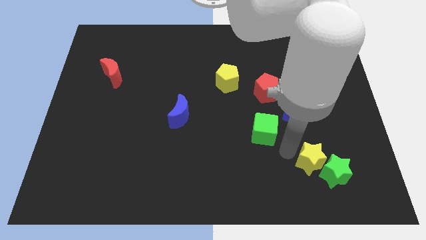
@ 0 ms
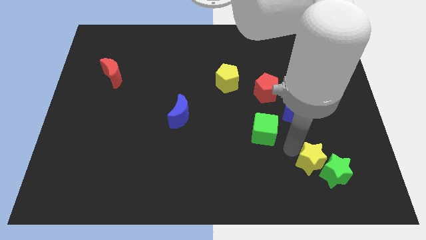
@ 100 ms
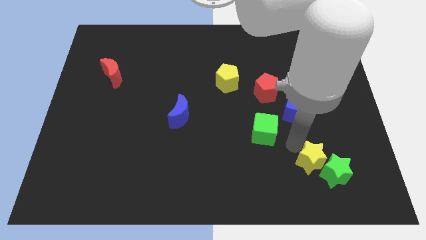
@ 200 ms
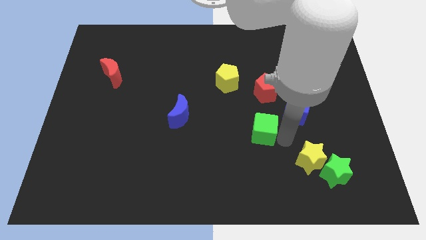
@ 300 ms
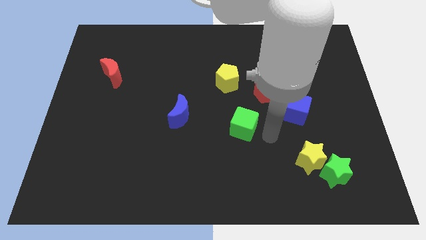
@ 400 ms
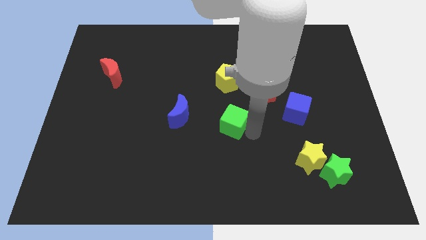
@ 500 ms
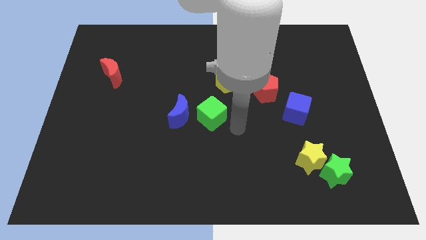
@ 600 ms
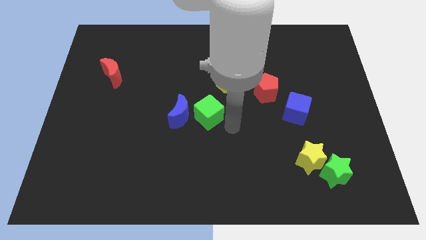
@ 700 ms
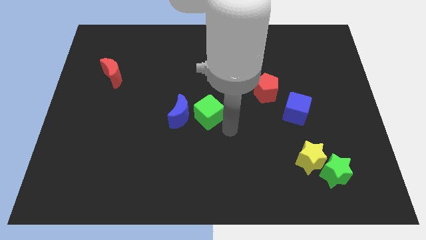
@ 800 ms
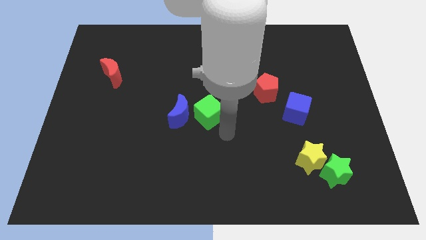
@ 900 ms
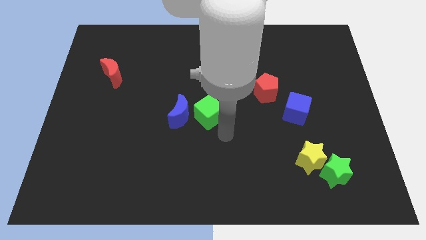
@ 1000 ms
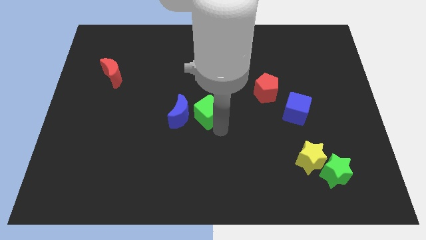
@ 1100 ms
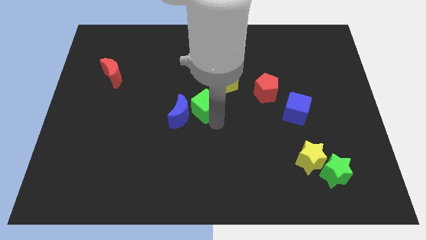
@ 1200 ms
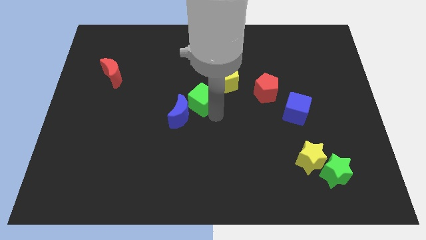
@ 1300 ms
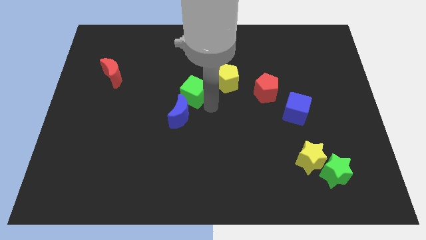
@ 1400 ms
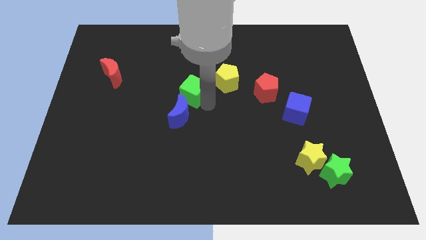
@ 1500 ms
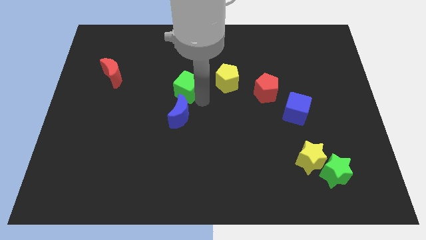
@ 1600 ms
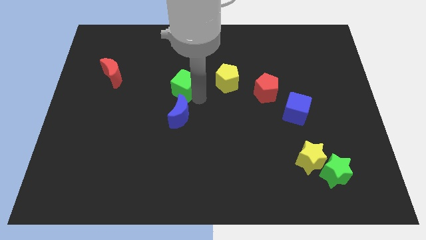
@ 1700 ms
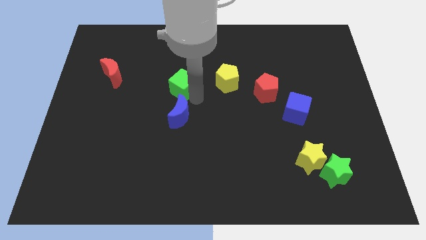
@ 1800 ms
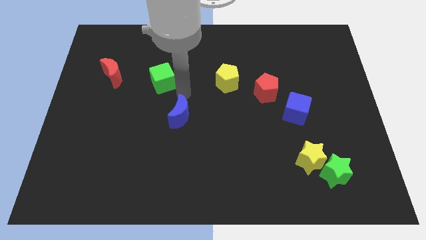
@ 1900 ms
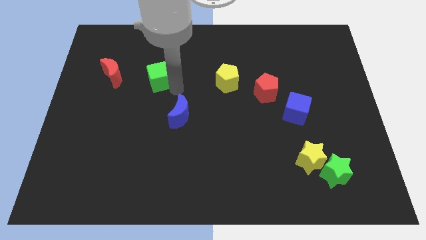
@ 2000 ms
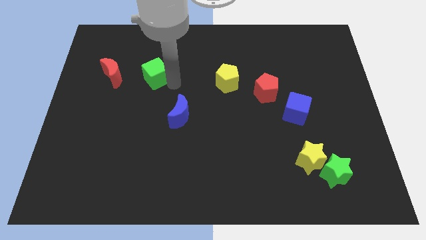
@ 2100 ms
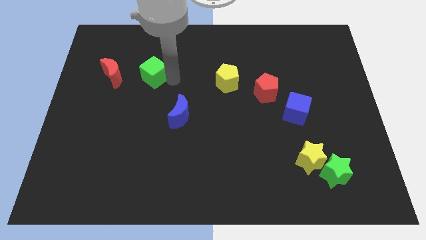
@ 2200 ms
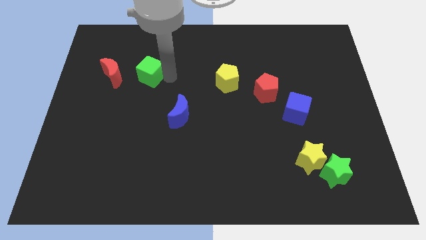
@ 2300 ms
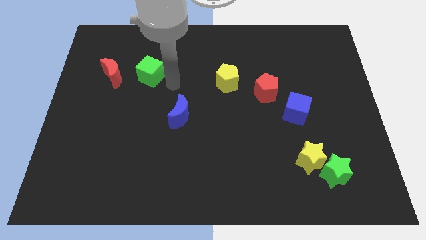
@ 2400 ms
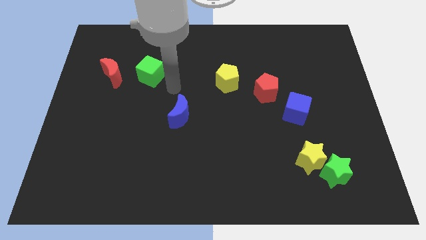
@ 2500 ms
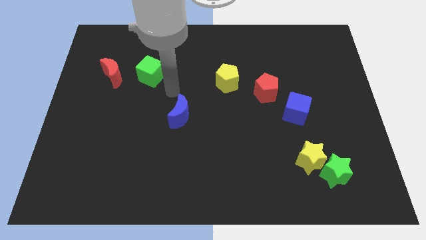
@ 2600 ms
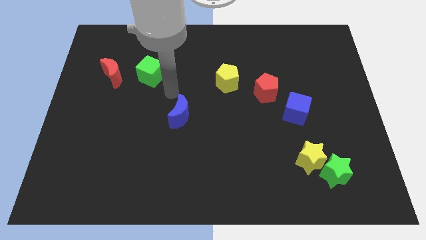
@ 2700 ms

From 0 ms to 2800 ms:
place green cube to the right of the red crescent

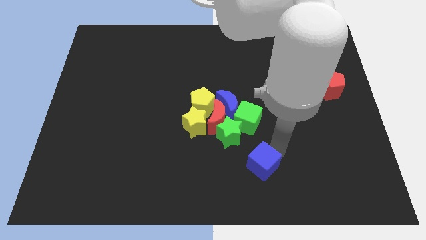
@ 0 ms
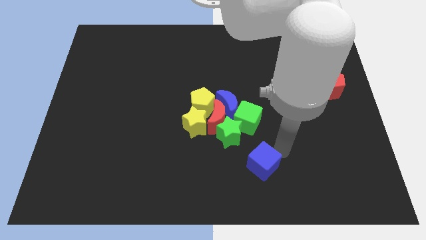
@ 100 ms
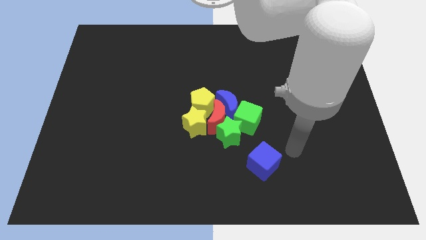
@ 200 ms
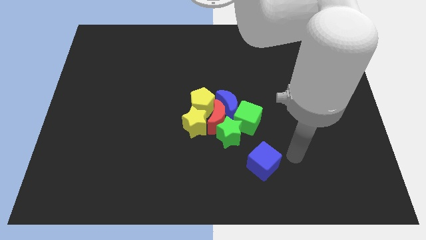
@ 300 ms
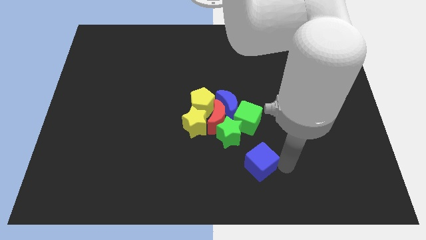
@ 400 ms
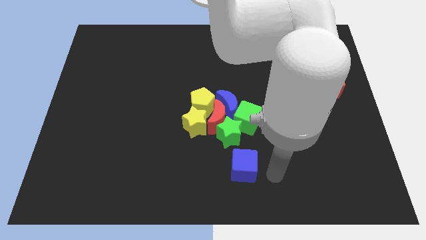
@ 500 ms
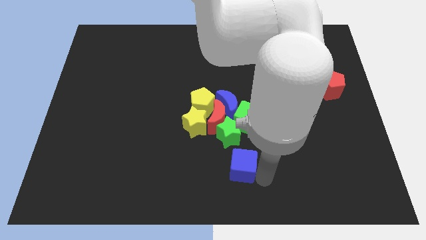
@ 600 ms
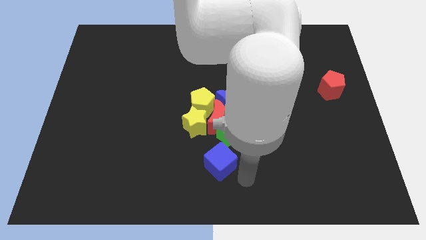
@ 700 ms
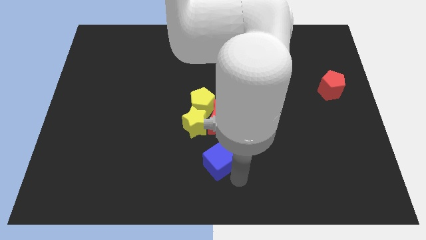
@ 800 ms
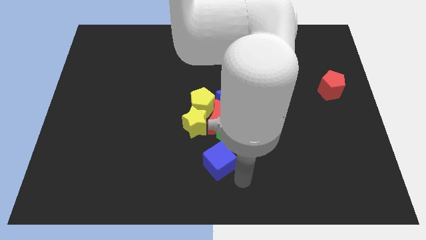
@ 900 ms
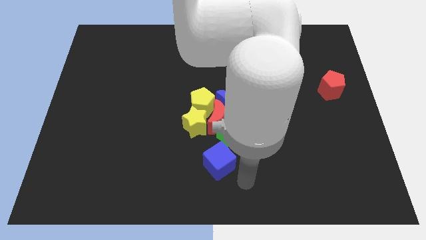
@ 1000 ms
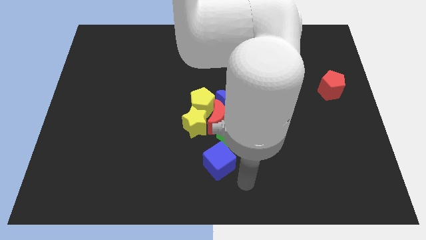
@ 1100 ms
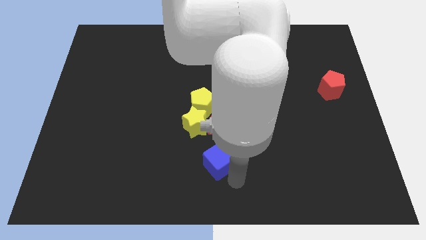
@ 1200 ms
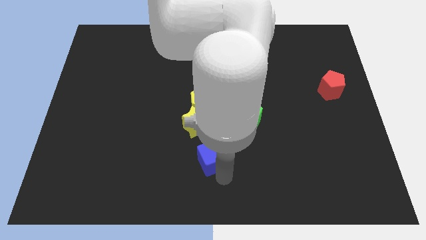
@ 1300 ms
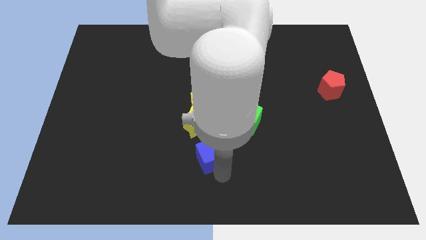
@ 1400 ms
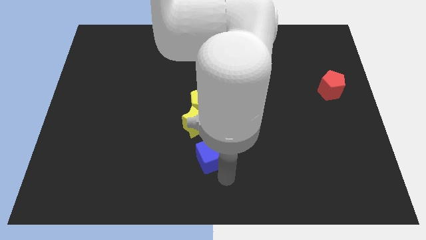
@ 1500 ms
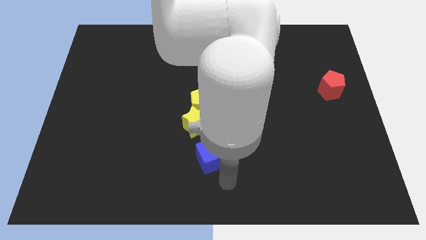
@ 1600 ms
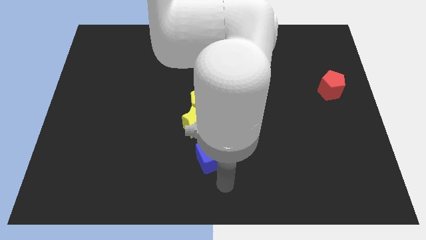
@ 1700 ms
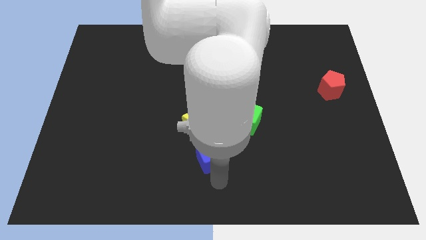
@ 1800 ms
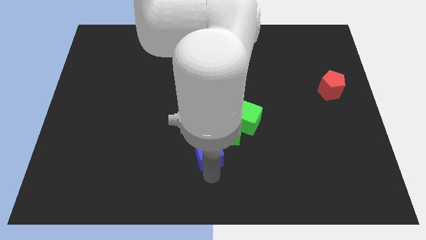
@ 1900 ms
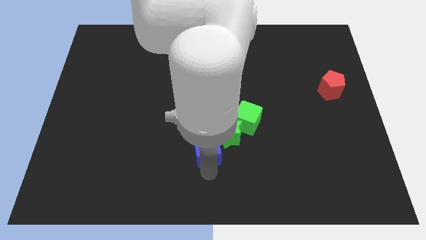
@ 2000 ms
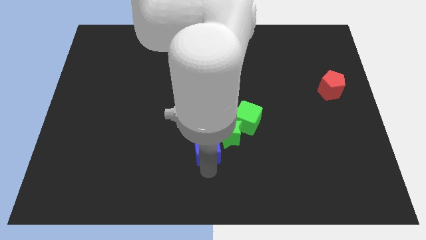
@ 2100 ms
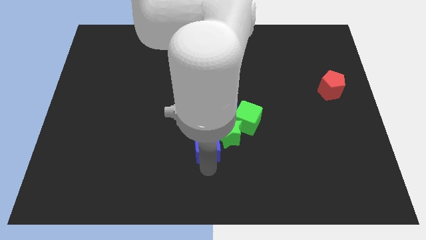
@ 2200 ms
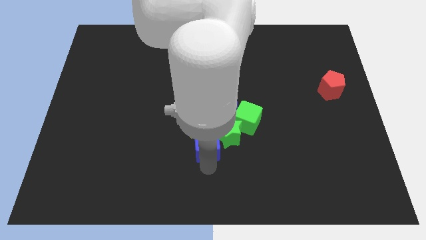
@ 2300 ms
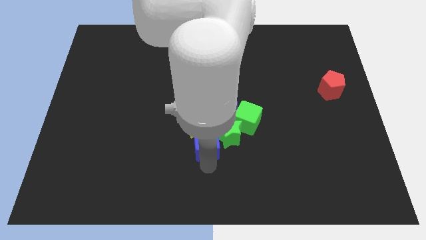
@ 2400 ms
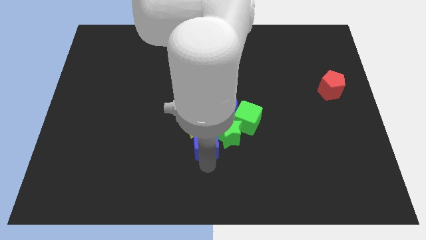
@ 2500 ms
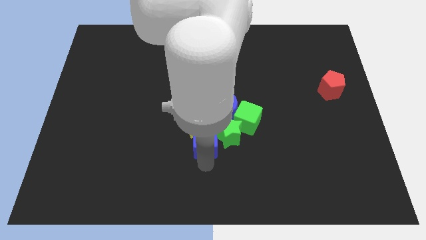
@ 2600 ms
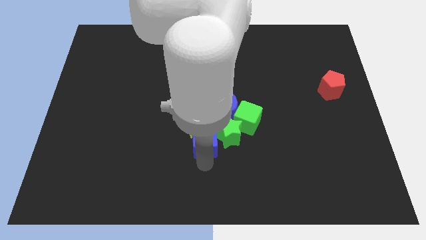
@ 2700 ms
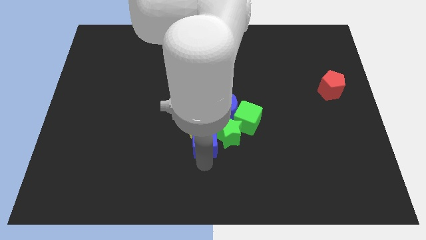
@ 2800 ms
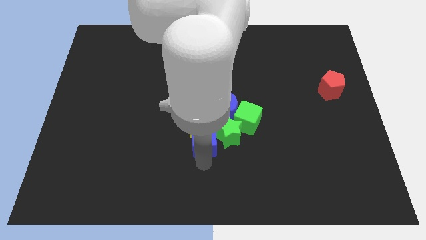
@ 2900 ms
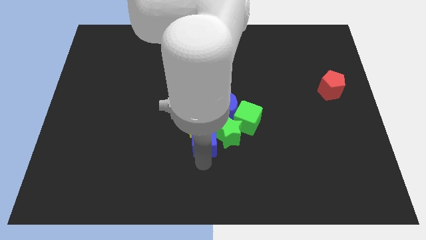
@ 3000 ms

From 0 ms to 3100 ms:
place blue cube below to the yellow star

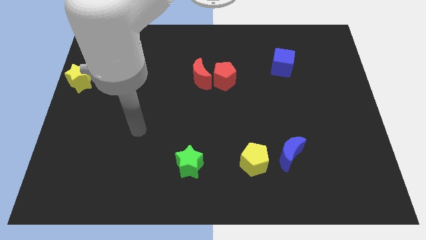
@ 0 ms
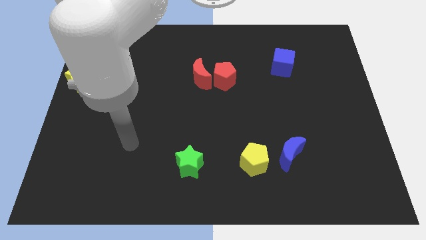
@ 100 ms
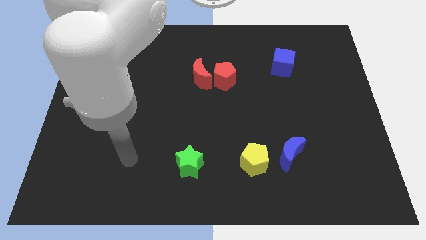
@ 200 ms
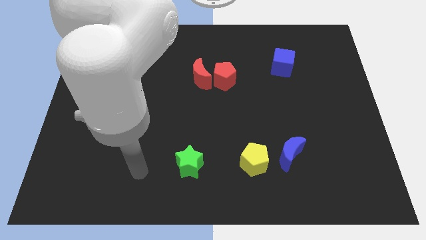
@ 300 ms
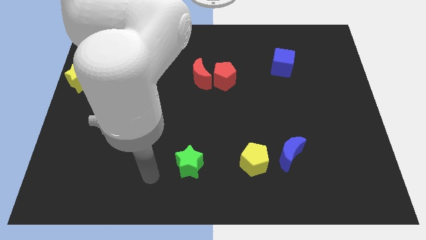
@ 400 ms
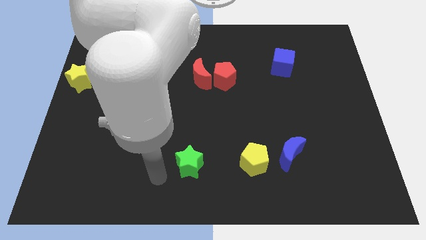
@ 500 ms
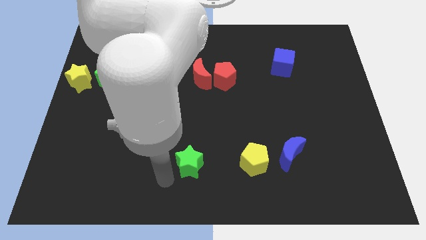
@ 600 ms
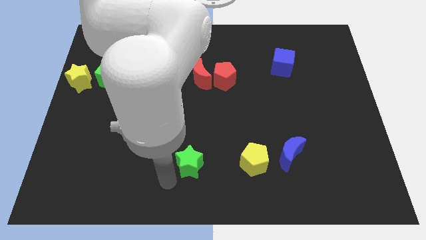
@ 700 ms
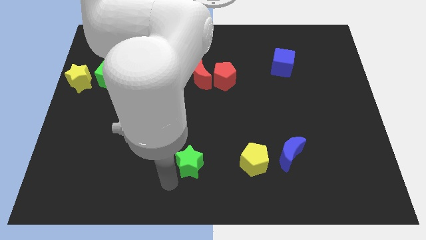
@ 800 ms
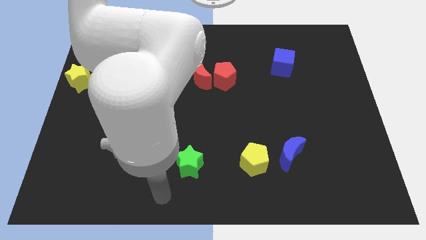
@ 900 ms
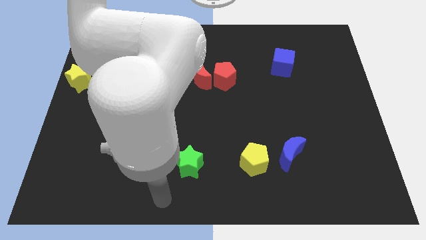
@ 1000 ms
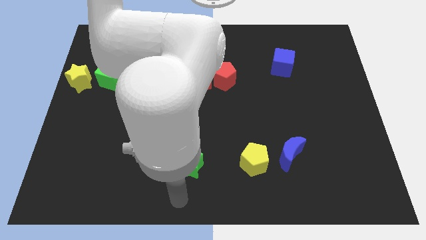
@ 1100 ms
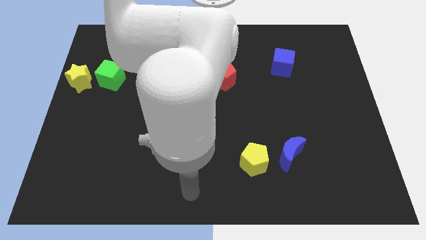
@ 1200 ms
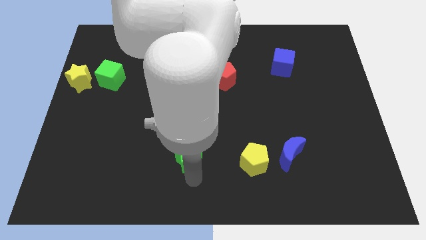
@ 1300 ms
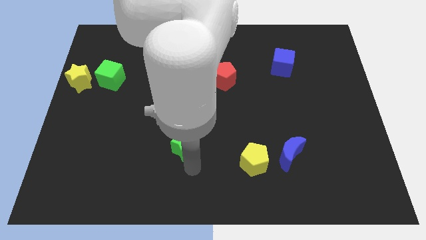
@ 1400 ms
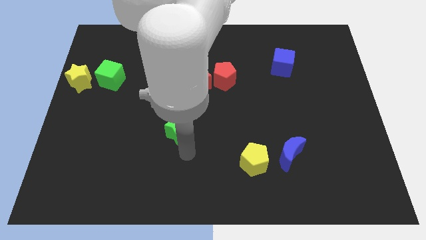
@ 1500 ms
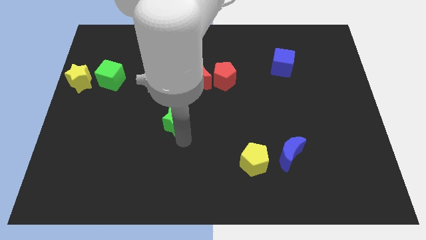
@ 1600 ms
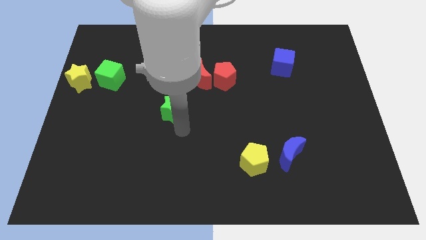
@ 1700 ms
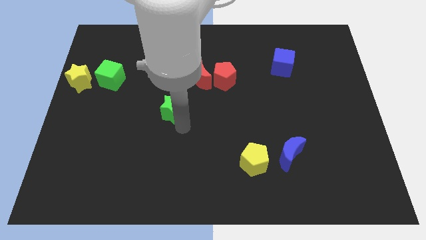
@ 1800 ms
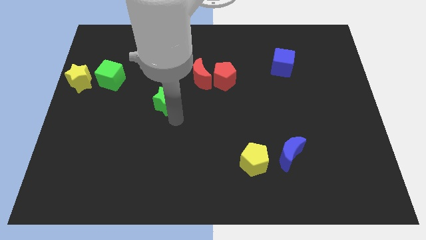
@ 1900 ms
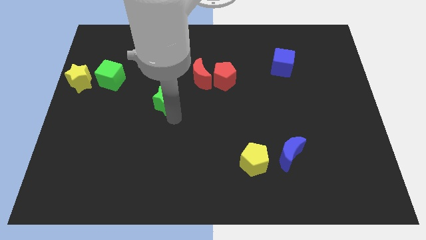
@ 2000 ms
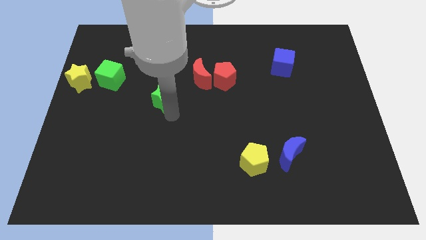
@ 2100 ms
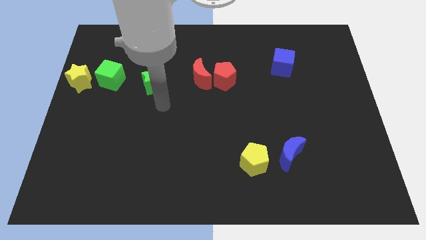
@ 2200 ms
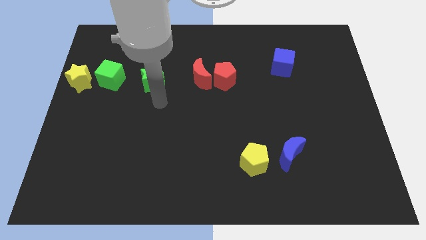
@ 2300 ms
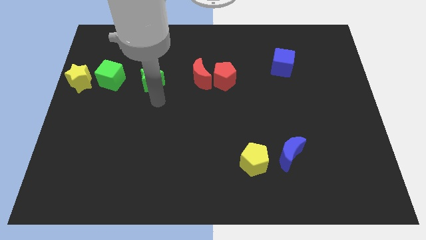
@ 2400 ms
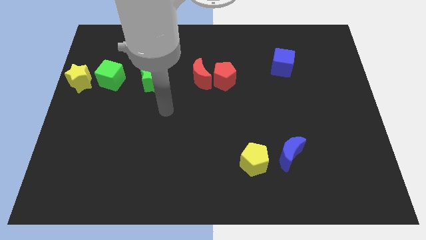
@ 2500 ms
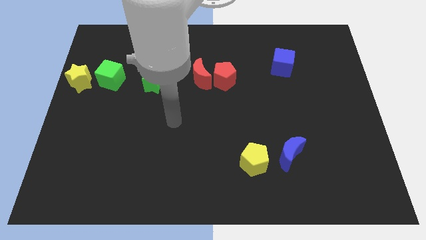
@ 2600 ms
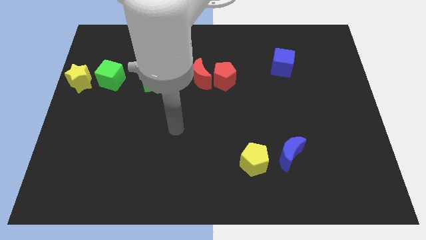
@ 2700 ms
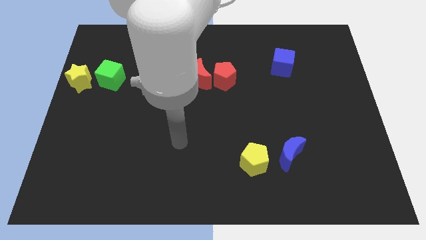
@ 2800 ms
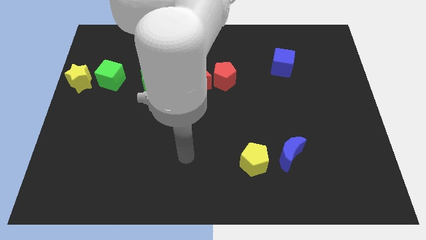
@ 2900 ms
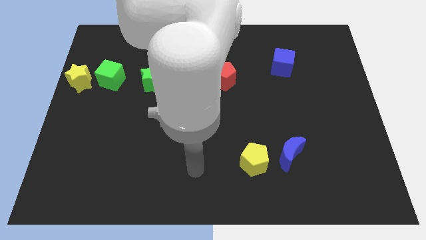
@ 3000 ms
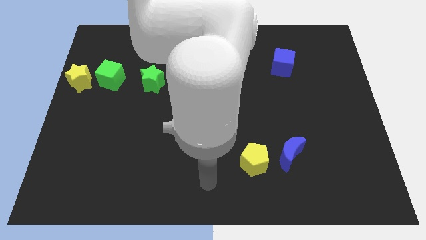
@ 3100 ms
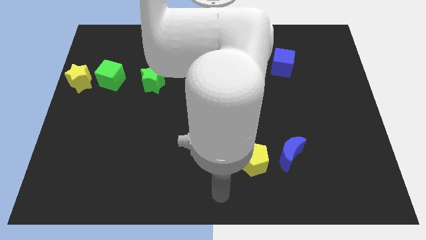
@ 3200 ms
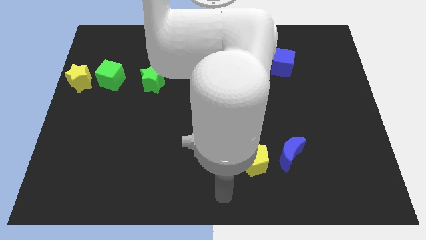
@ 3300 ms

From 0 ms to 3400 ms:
place the green star to the right of the green cube
